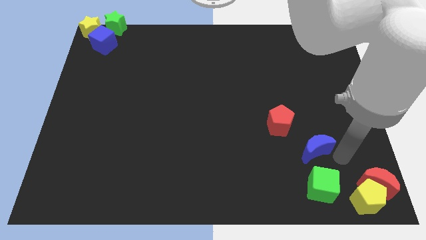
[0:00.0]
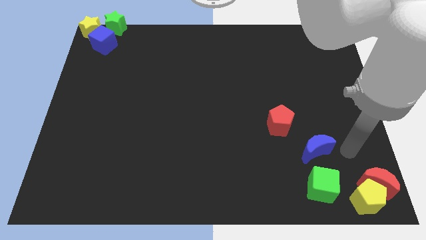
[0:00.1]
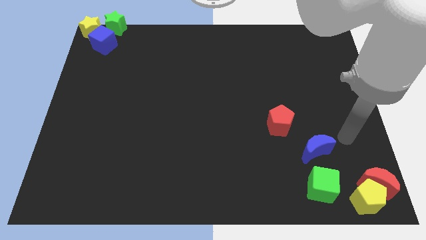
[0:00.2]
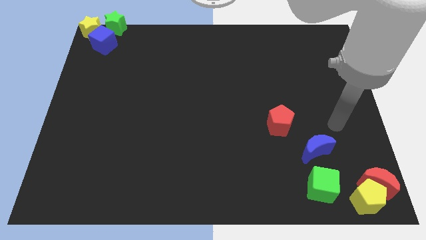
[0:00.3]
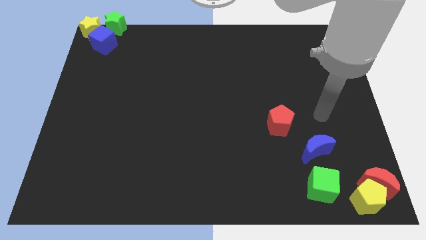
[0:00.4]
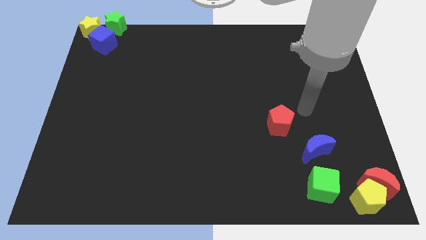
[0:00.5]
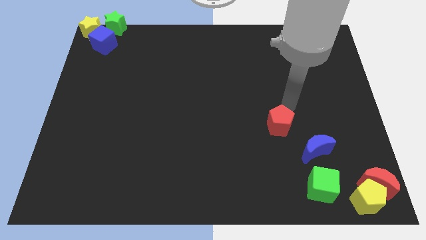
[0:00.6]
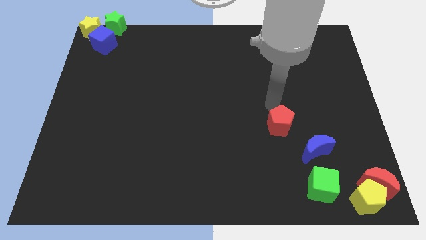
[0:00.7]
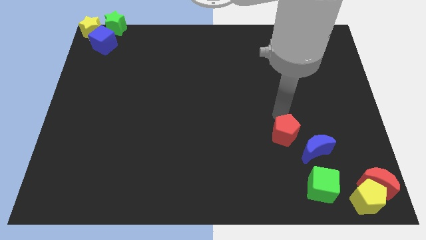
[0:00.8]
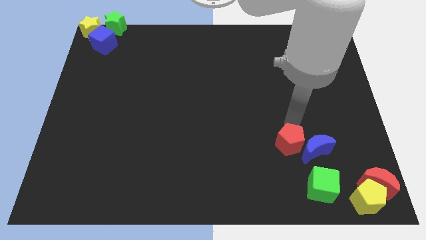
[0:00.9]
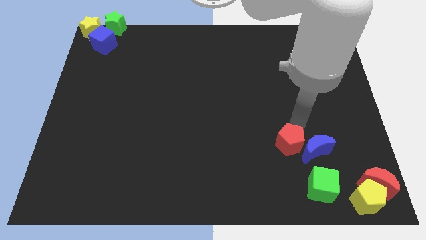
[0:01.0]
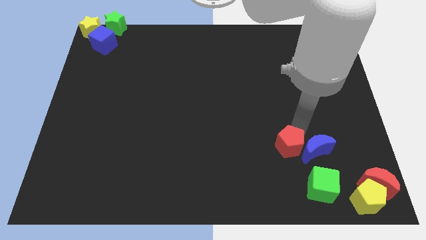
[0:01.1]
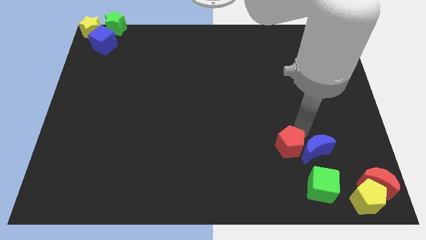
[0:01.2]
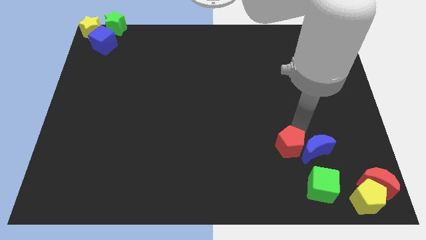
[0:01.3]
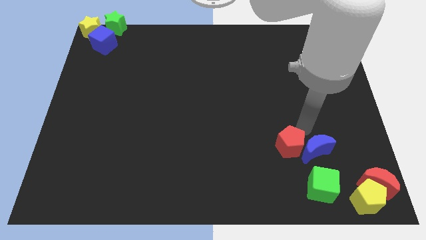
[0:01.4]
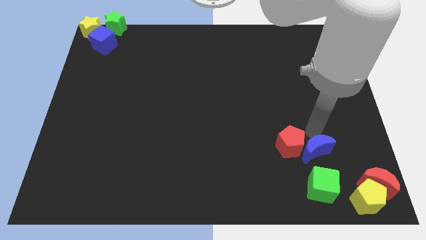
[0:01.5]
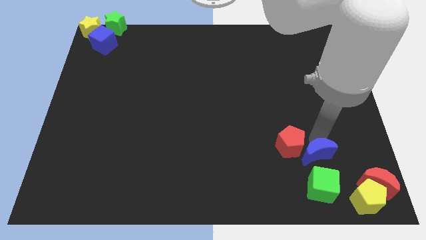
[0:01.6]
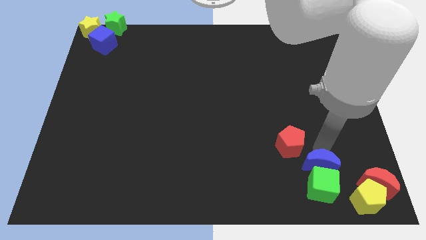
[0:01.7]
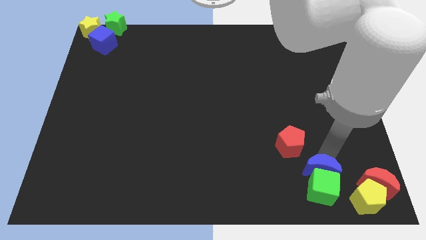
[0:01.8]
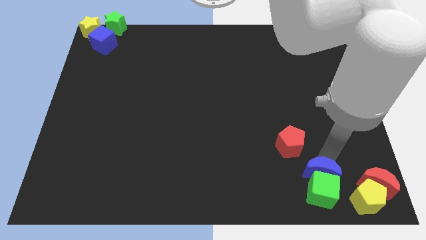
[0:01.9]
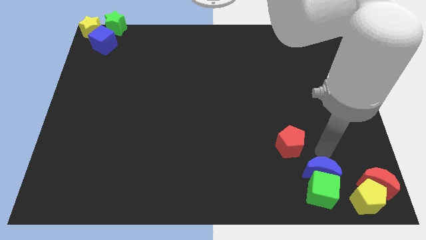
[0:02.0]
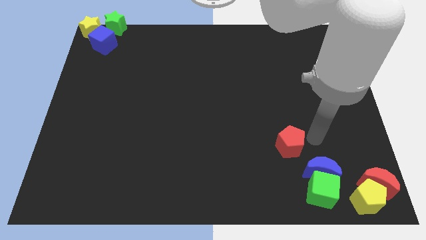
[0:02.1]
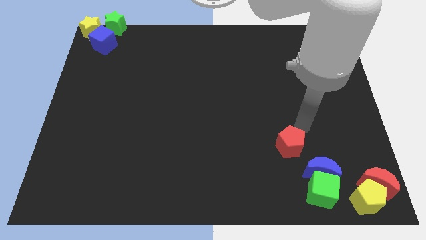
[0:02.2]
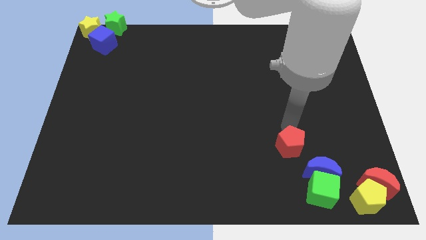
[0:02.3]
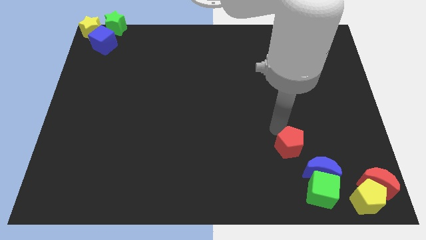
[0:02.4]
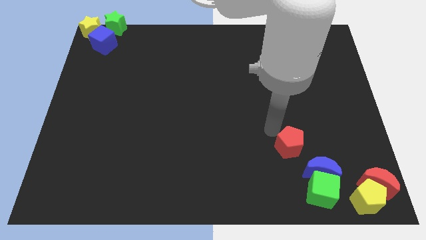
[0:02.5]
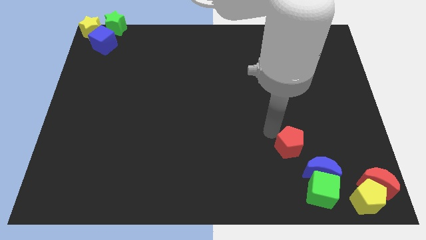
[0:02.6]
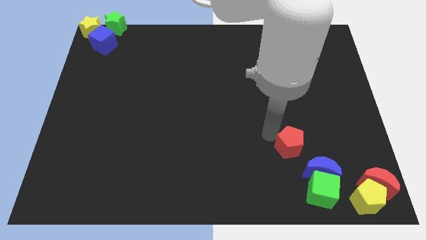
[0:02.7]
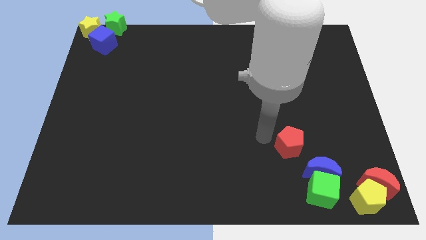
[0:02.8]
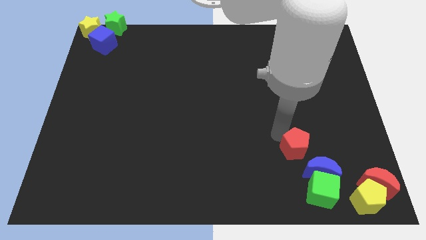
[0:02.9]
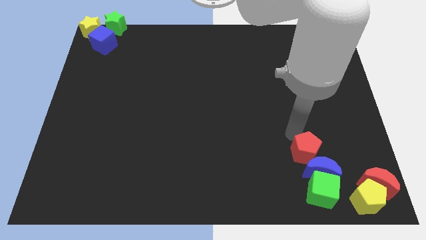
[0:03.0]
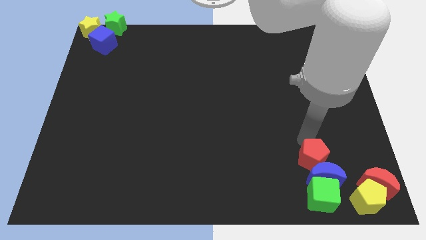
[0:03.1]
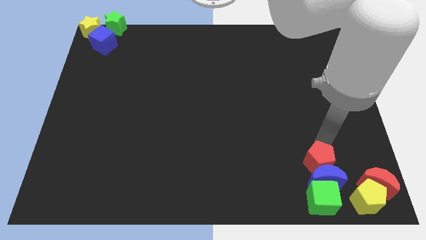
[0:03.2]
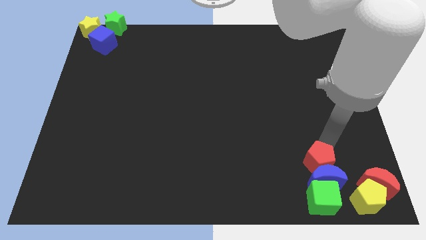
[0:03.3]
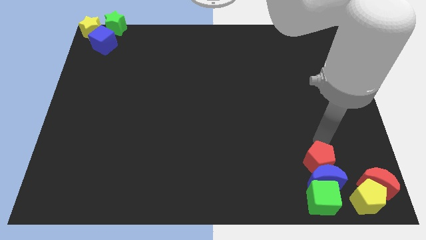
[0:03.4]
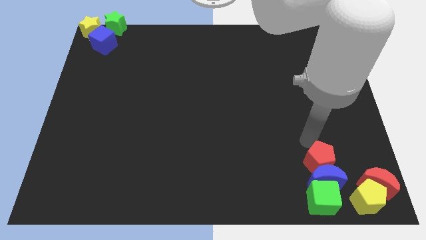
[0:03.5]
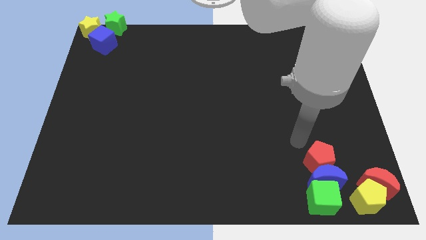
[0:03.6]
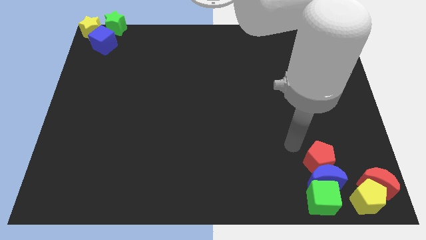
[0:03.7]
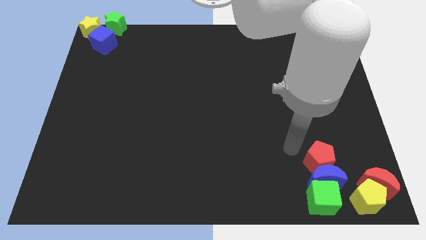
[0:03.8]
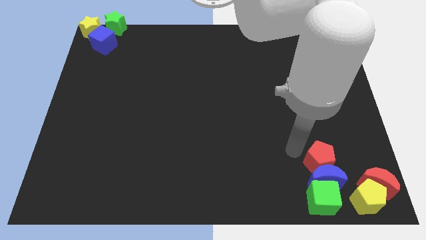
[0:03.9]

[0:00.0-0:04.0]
move the blue crescent and red pentagon to the top side of the green cube

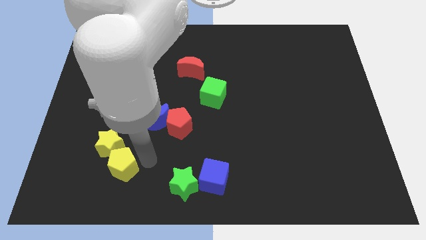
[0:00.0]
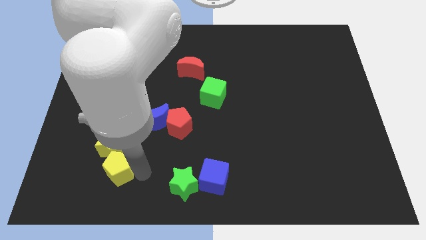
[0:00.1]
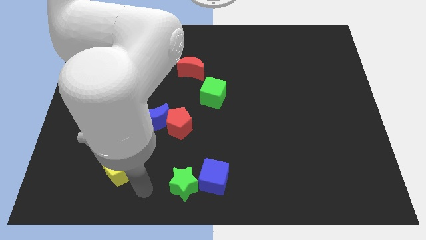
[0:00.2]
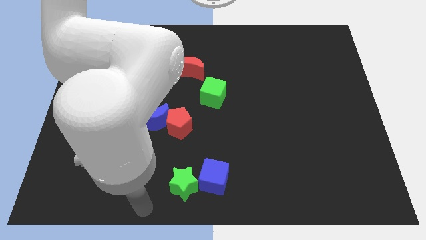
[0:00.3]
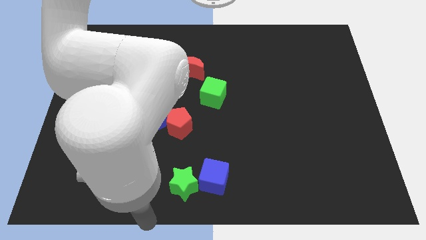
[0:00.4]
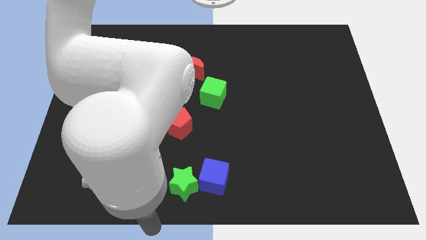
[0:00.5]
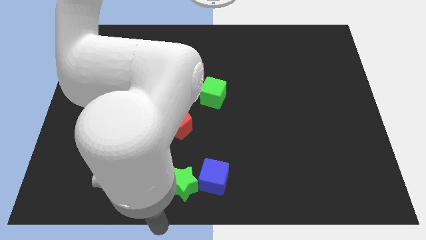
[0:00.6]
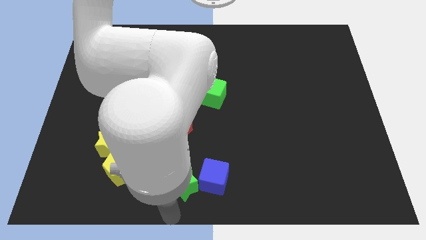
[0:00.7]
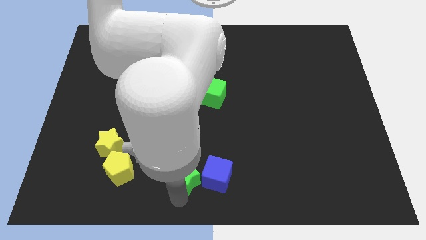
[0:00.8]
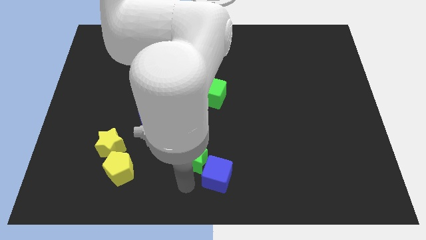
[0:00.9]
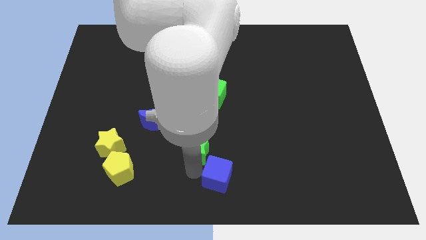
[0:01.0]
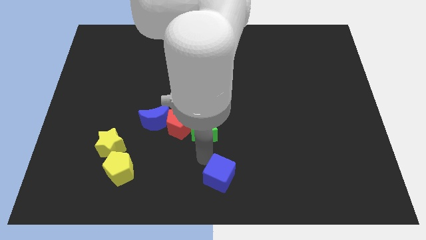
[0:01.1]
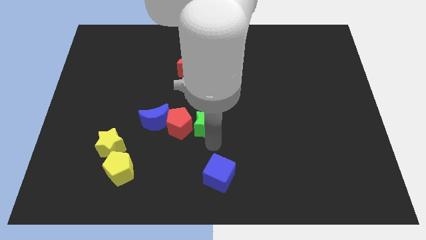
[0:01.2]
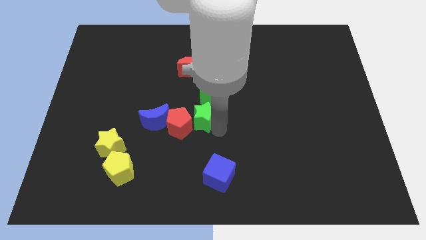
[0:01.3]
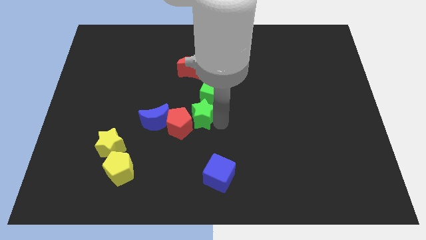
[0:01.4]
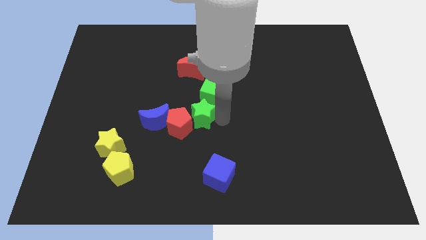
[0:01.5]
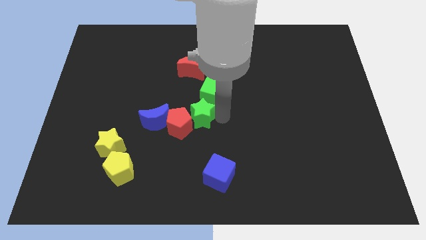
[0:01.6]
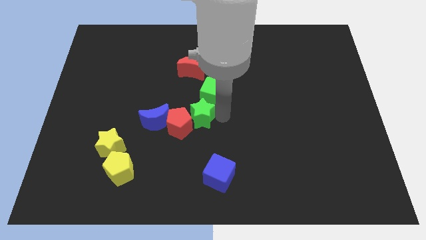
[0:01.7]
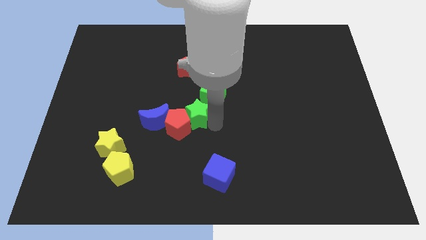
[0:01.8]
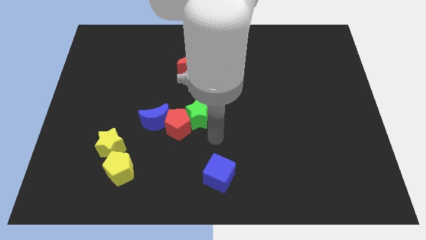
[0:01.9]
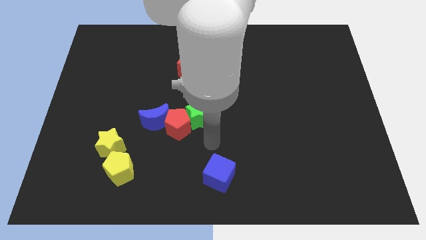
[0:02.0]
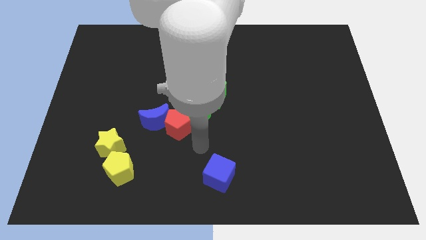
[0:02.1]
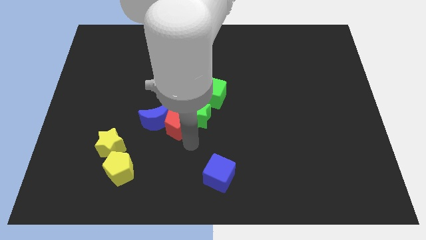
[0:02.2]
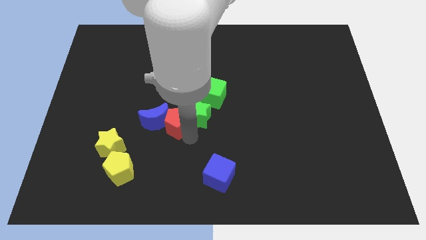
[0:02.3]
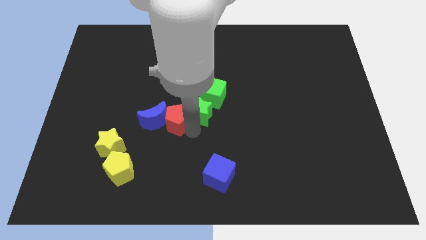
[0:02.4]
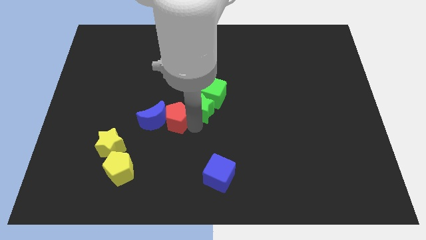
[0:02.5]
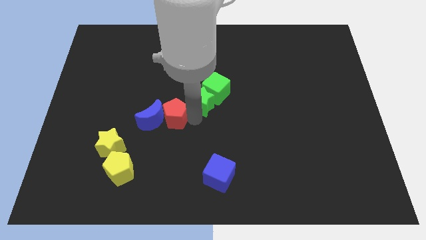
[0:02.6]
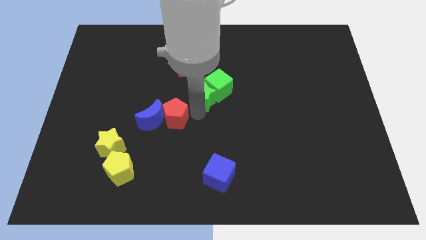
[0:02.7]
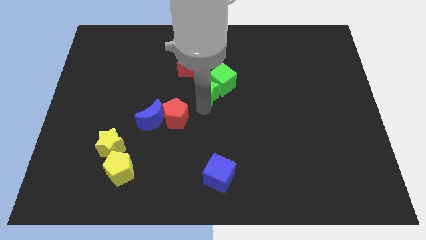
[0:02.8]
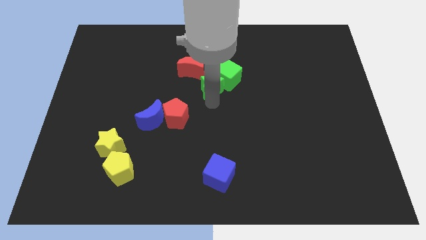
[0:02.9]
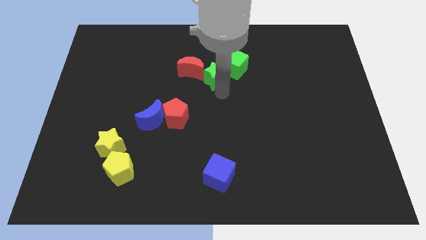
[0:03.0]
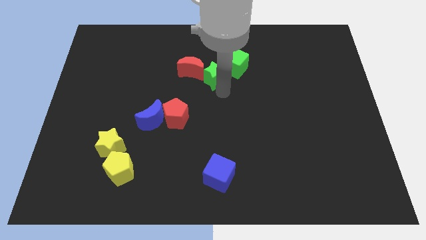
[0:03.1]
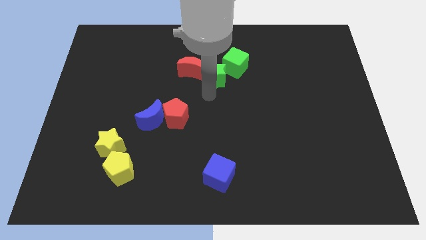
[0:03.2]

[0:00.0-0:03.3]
place the green star to the right of the red moon

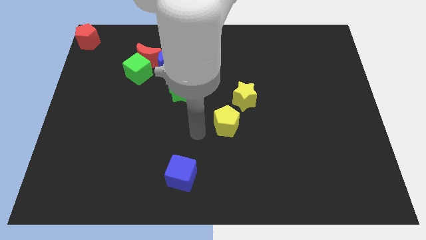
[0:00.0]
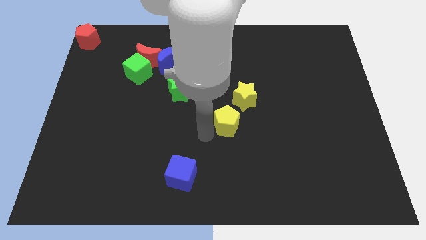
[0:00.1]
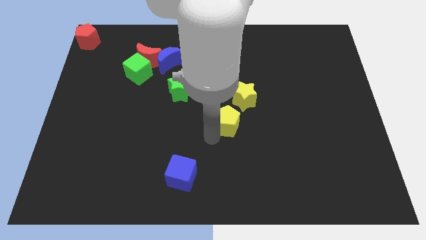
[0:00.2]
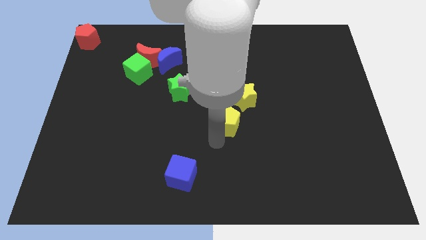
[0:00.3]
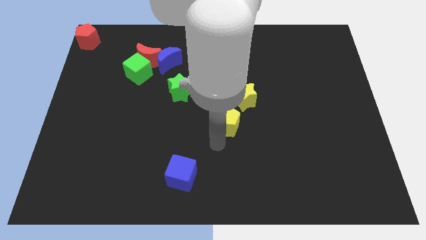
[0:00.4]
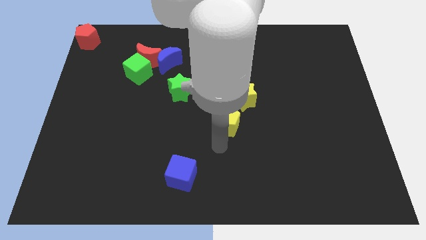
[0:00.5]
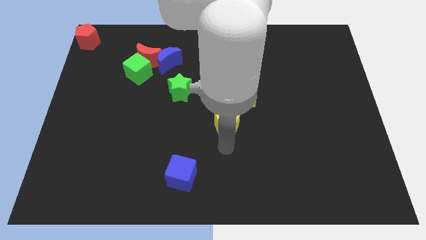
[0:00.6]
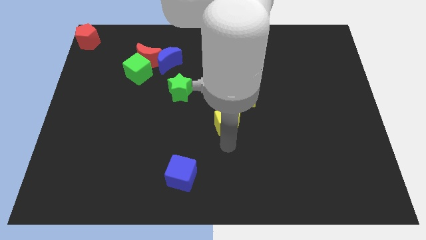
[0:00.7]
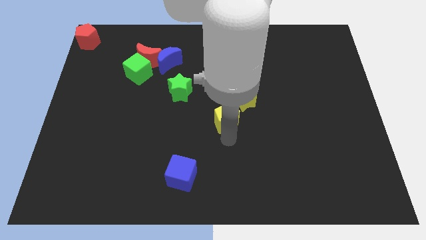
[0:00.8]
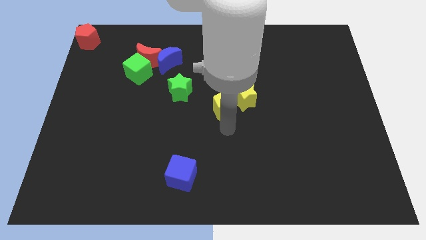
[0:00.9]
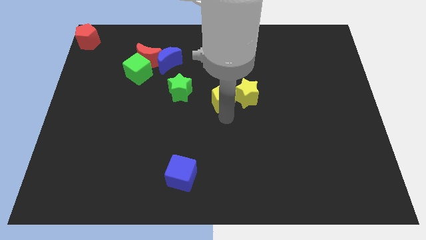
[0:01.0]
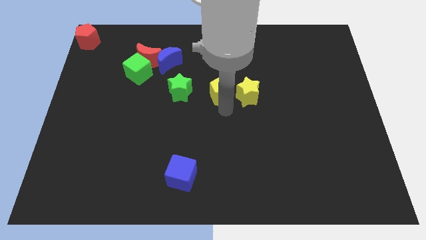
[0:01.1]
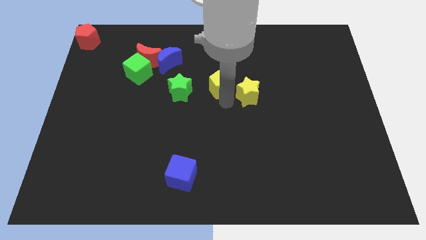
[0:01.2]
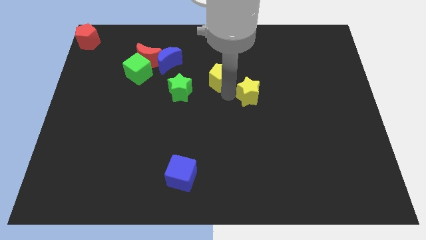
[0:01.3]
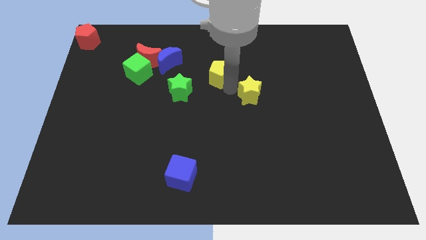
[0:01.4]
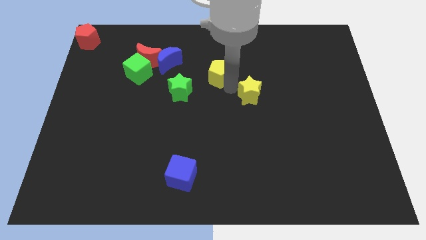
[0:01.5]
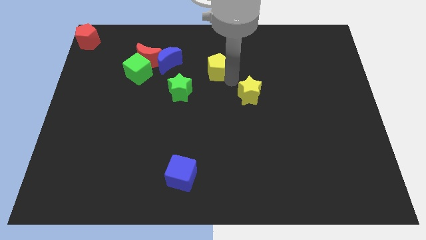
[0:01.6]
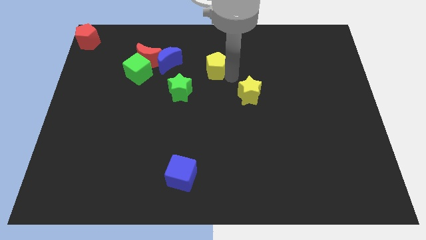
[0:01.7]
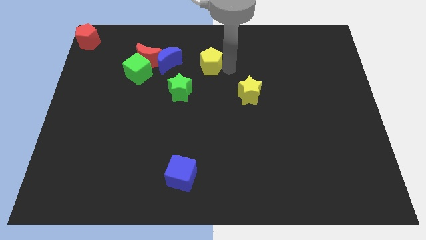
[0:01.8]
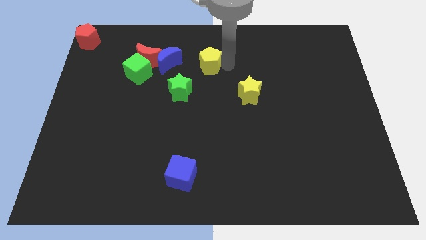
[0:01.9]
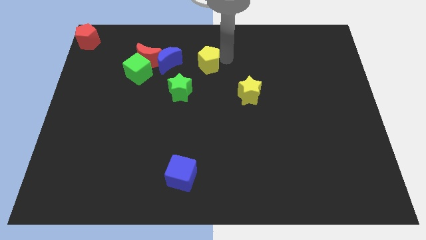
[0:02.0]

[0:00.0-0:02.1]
move the yellow pentagon slightly towards the top of the board
